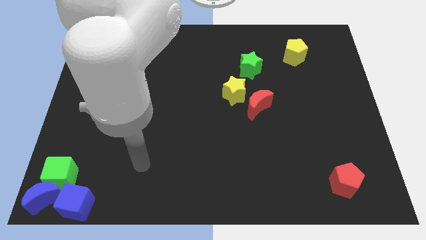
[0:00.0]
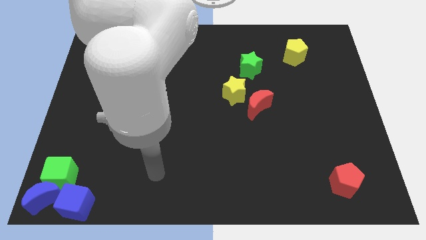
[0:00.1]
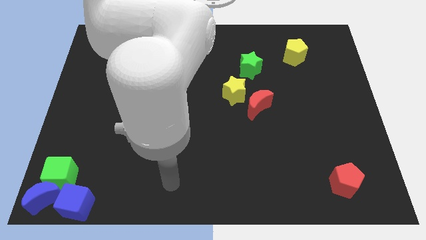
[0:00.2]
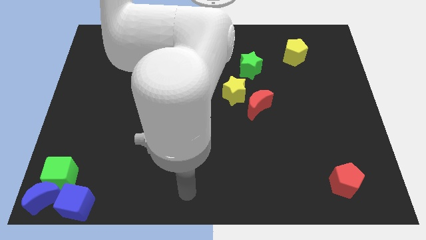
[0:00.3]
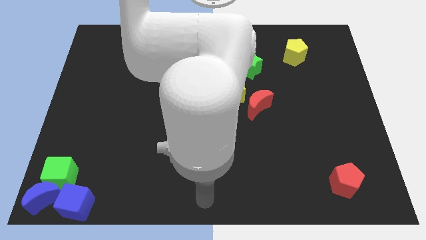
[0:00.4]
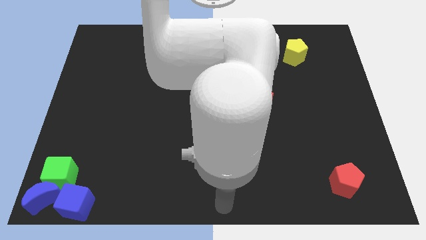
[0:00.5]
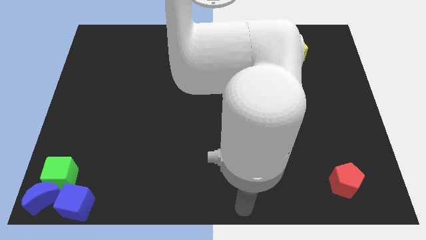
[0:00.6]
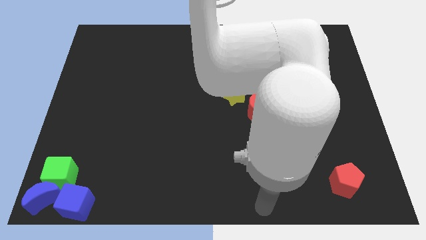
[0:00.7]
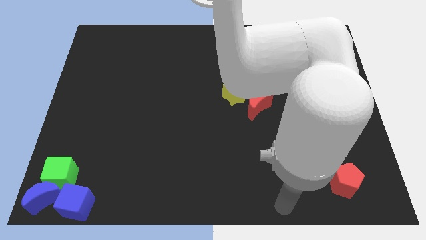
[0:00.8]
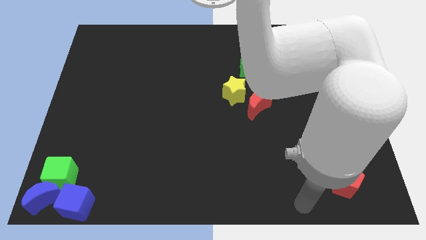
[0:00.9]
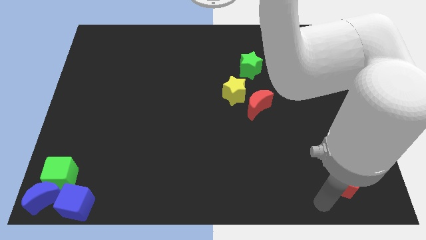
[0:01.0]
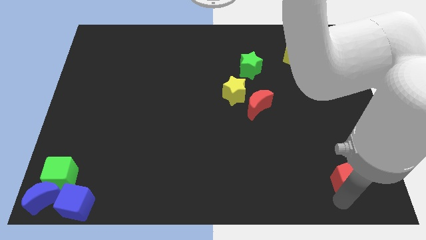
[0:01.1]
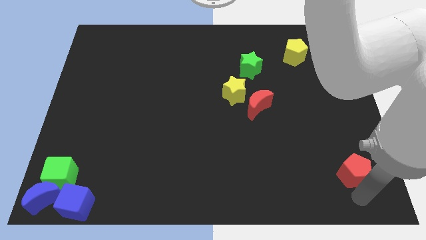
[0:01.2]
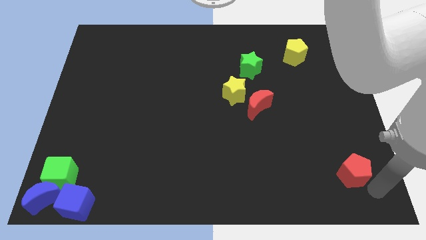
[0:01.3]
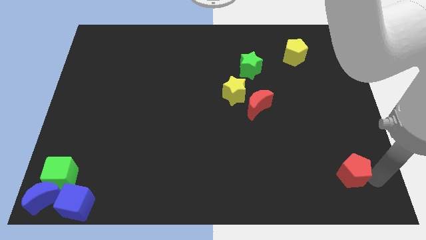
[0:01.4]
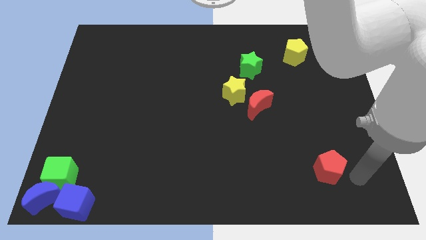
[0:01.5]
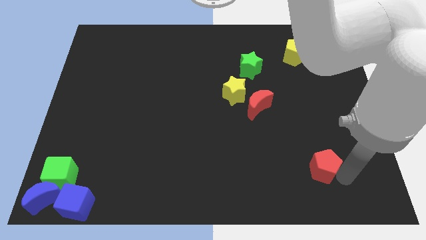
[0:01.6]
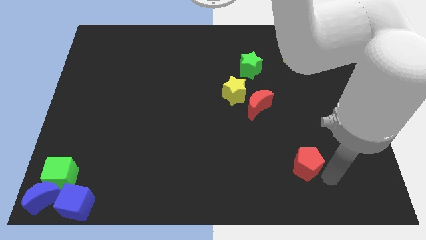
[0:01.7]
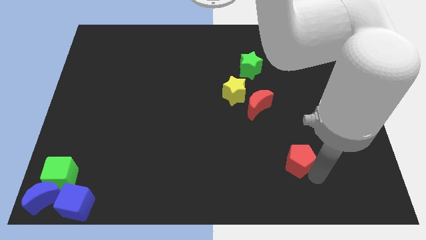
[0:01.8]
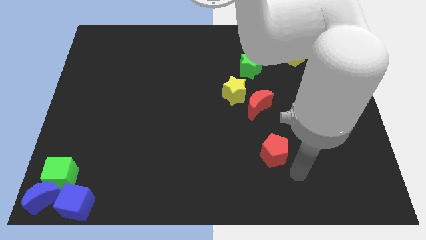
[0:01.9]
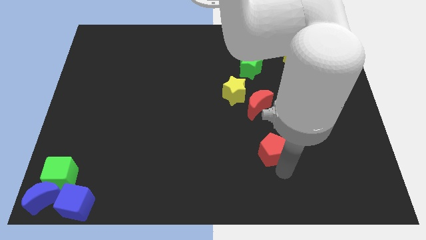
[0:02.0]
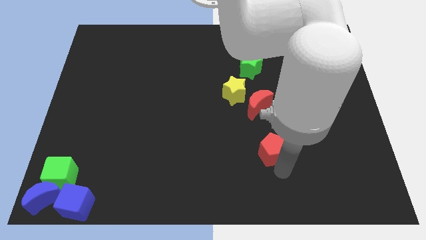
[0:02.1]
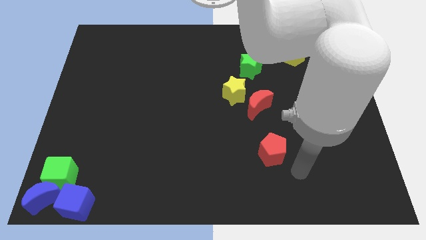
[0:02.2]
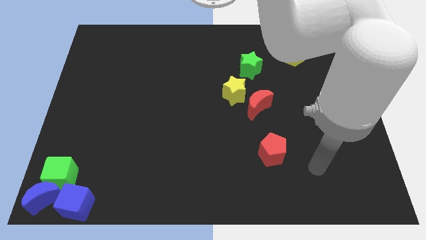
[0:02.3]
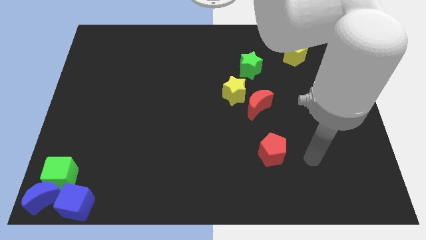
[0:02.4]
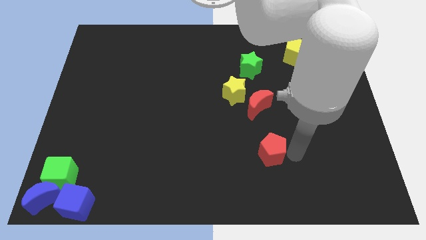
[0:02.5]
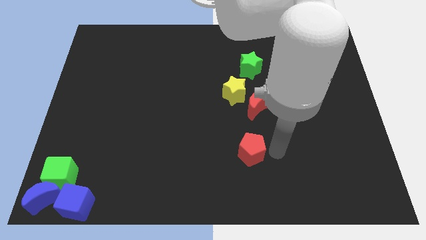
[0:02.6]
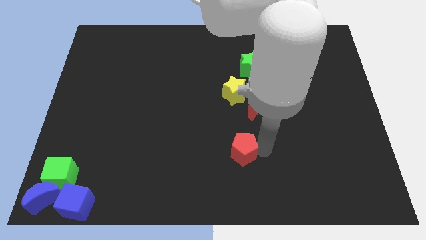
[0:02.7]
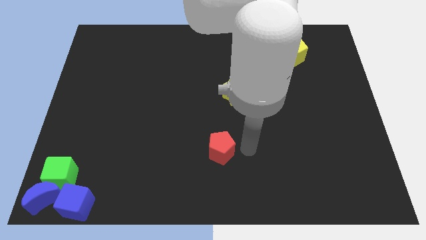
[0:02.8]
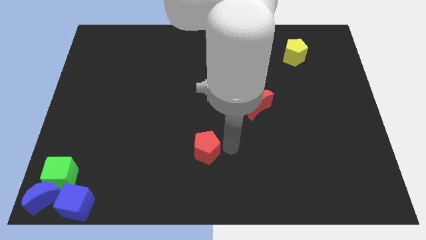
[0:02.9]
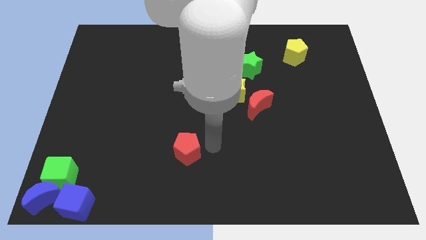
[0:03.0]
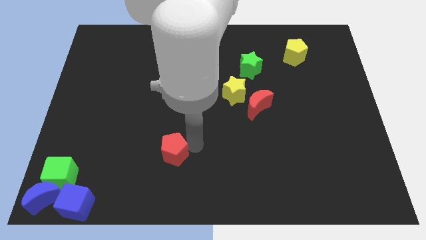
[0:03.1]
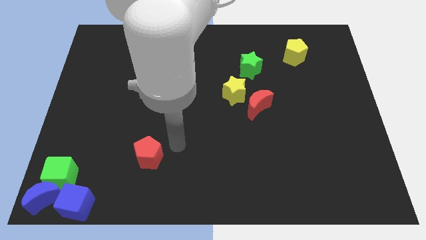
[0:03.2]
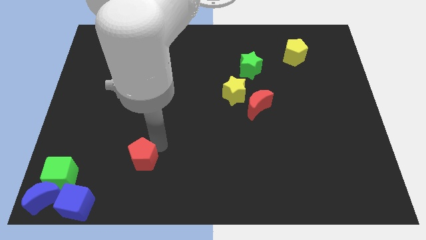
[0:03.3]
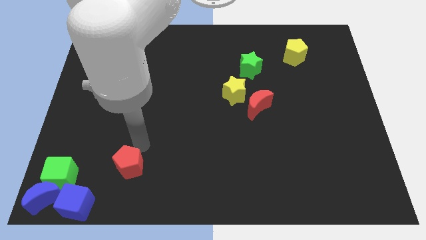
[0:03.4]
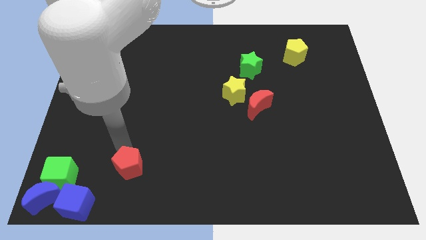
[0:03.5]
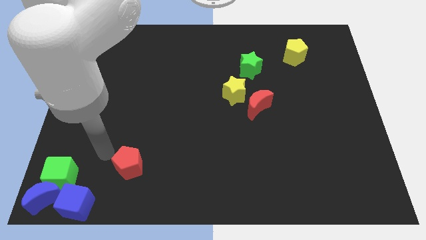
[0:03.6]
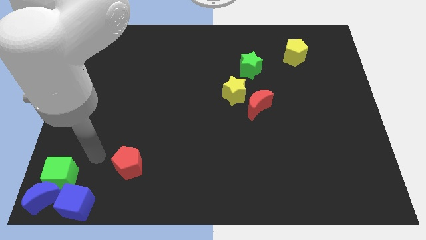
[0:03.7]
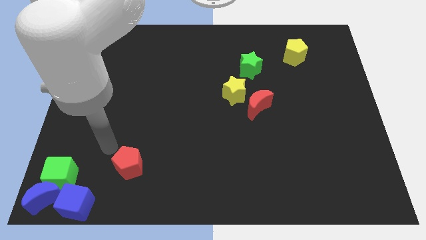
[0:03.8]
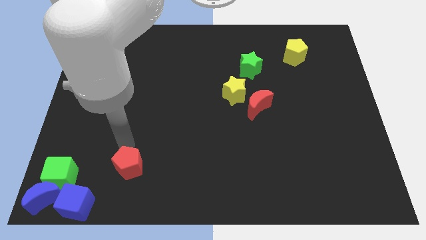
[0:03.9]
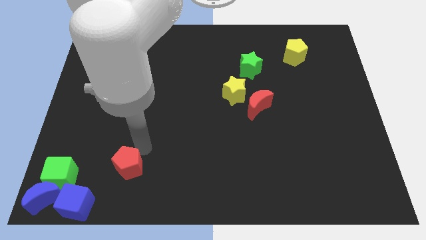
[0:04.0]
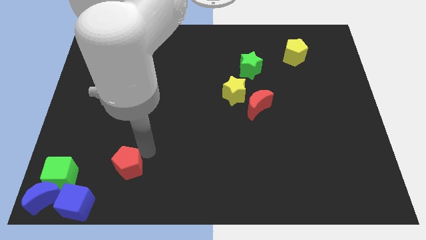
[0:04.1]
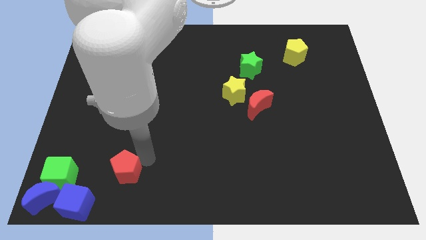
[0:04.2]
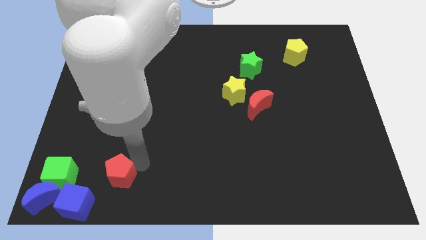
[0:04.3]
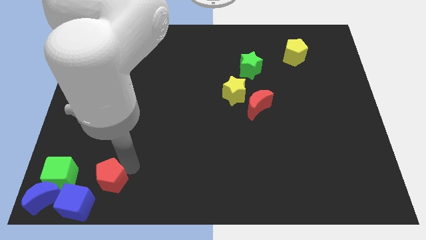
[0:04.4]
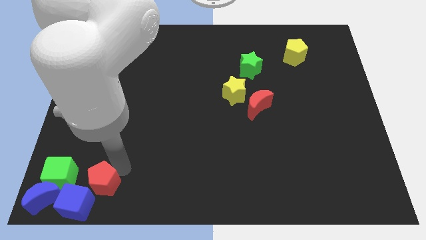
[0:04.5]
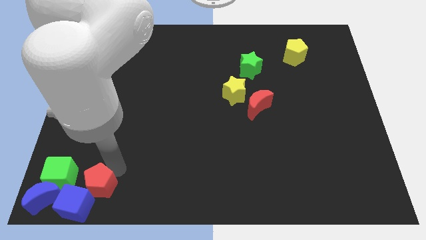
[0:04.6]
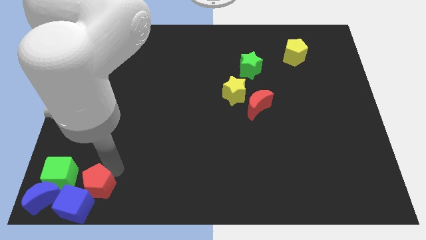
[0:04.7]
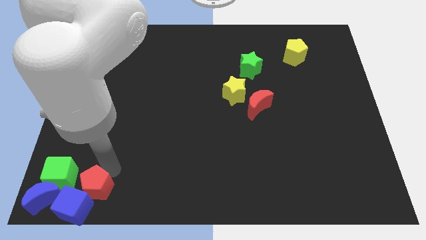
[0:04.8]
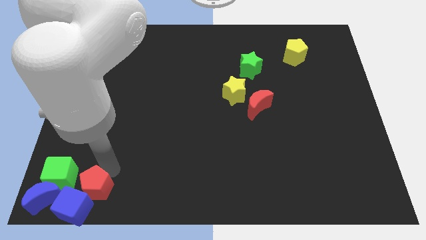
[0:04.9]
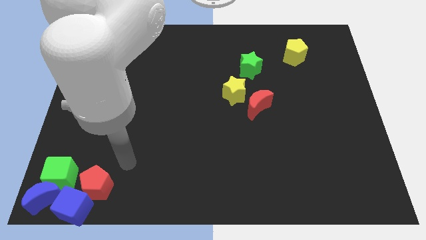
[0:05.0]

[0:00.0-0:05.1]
move the red pentagon above blue cube

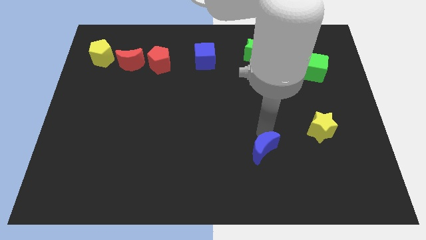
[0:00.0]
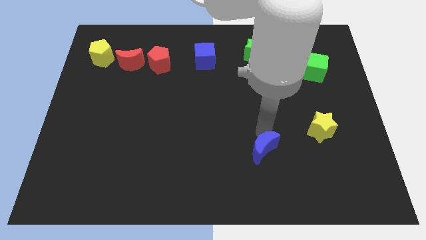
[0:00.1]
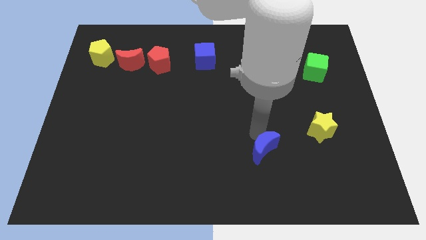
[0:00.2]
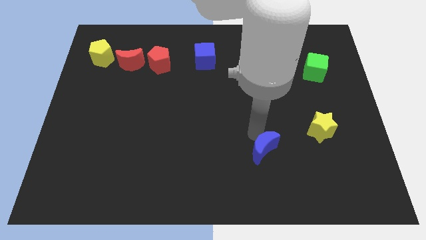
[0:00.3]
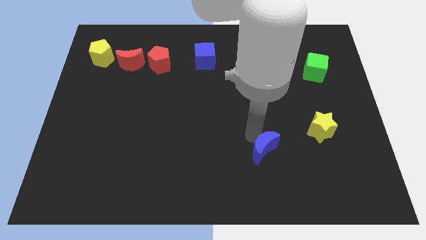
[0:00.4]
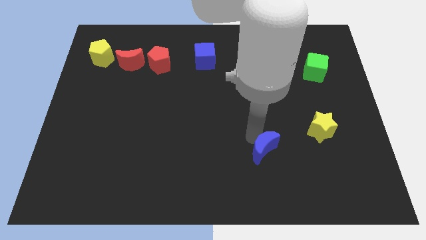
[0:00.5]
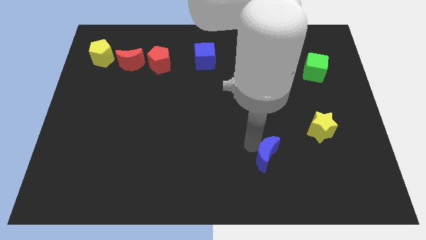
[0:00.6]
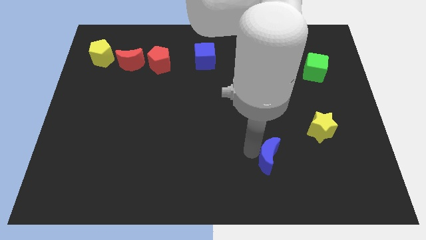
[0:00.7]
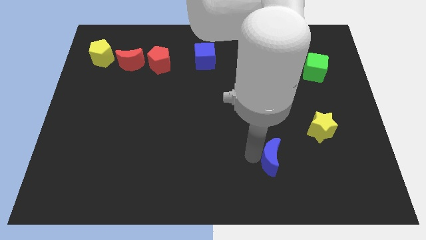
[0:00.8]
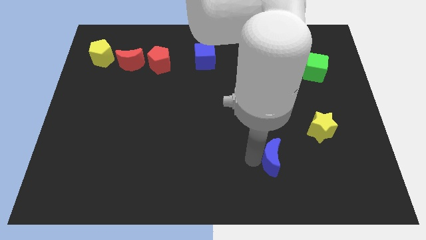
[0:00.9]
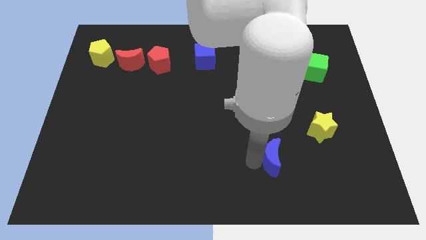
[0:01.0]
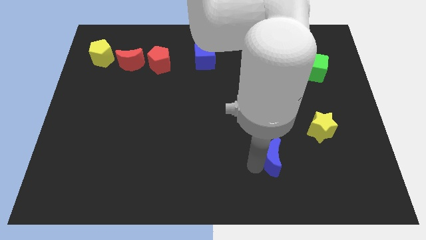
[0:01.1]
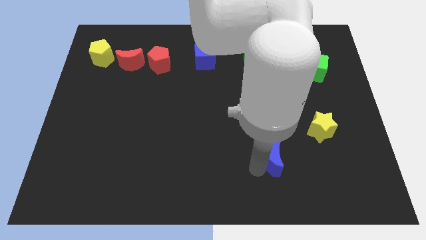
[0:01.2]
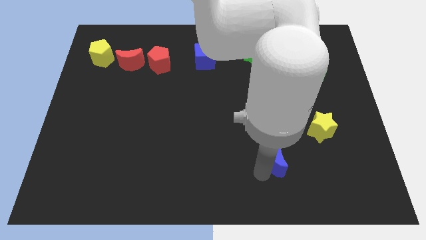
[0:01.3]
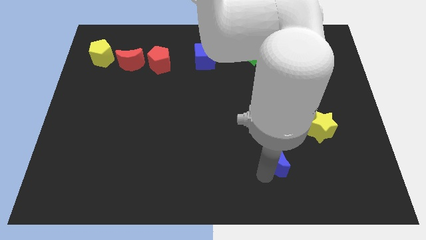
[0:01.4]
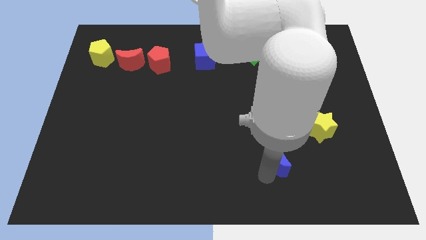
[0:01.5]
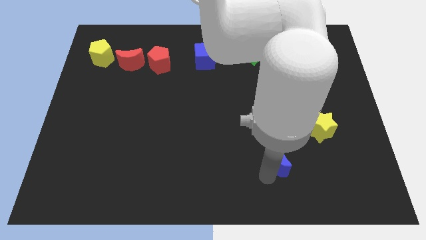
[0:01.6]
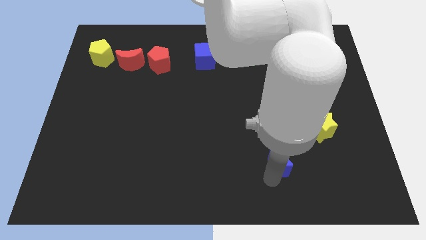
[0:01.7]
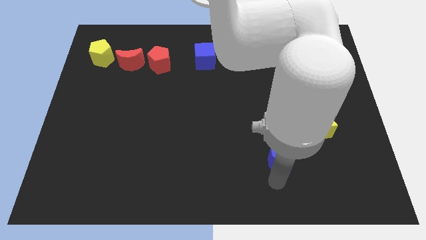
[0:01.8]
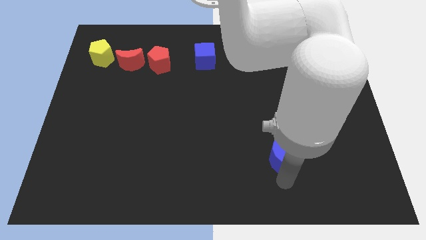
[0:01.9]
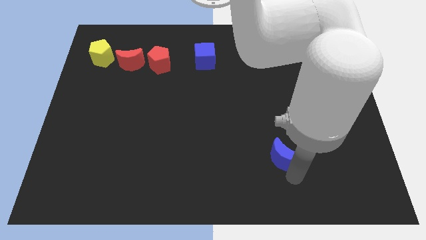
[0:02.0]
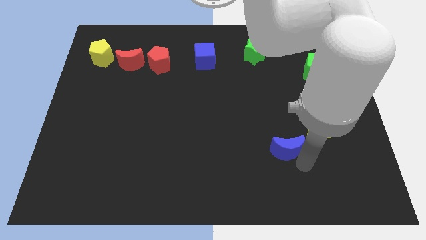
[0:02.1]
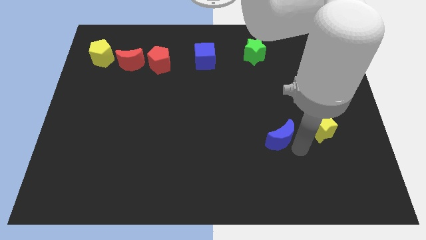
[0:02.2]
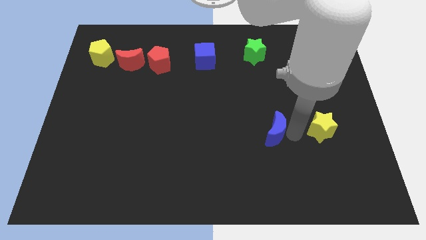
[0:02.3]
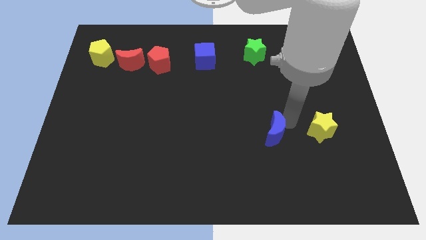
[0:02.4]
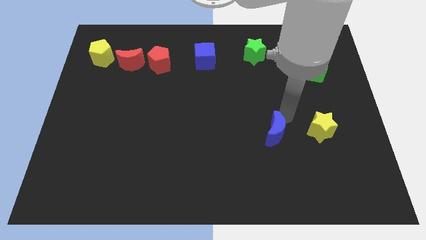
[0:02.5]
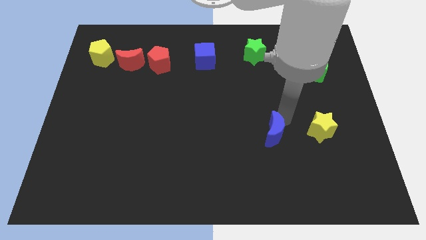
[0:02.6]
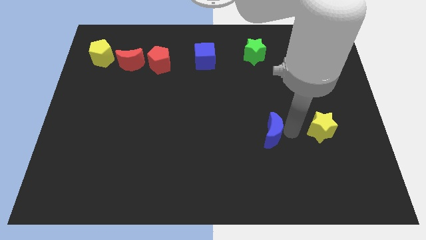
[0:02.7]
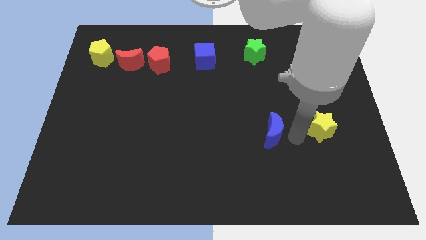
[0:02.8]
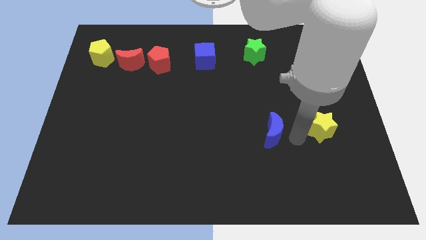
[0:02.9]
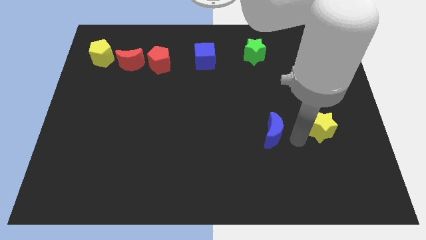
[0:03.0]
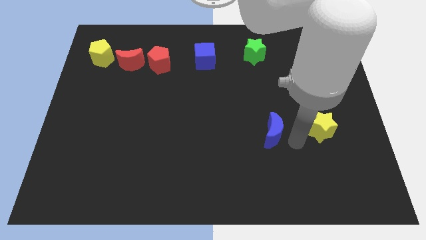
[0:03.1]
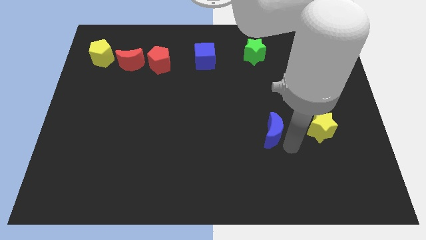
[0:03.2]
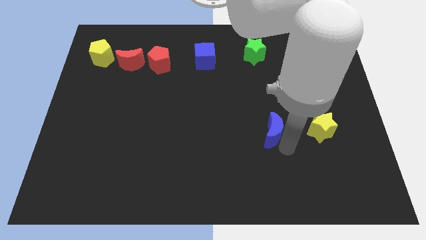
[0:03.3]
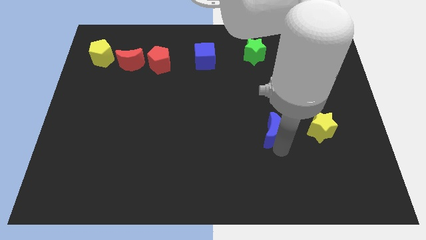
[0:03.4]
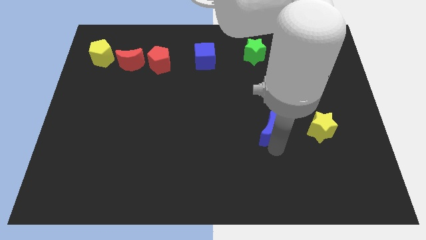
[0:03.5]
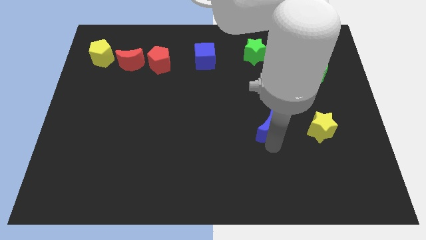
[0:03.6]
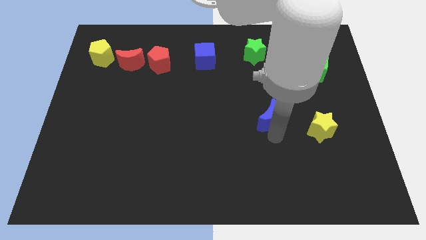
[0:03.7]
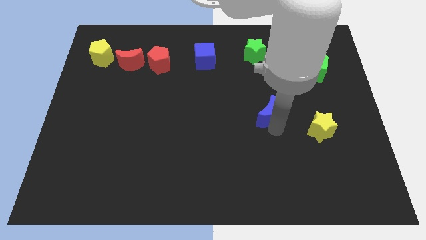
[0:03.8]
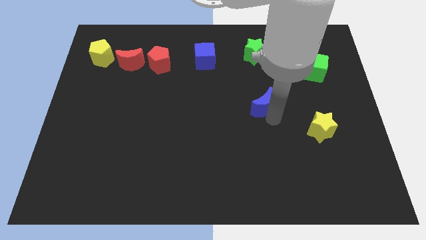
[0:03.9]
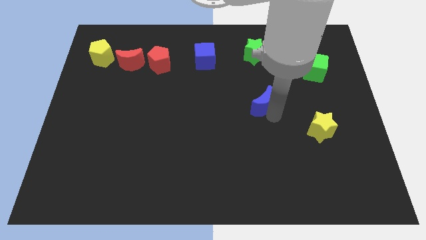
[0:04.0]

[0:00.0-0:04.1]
push the blue moon to the top left diagonally to the yellow star
